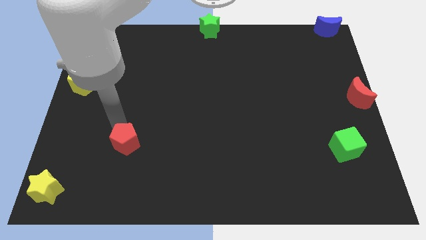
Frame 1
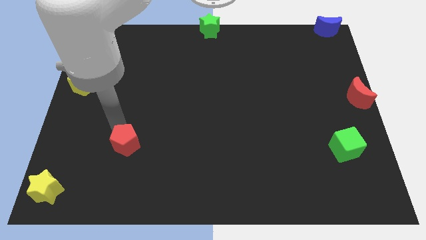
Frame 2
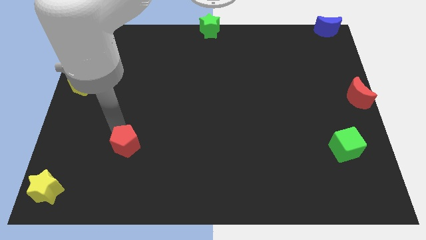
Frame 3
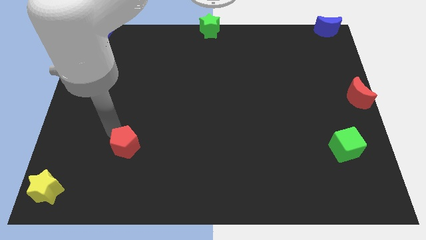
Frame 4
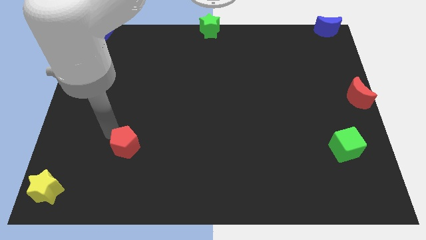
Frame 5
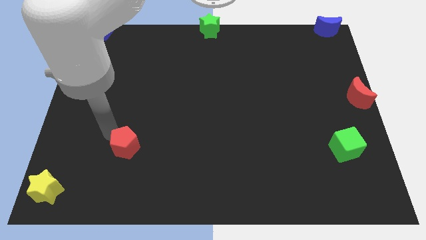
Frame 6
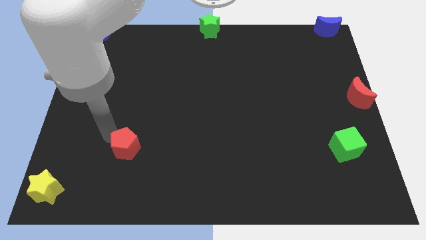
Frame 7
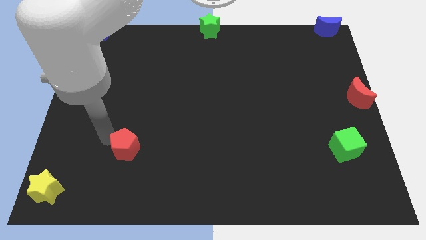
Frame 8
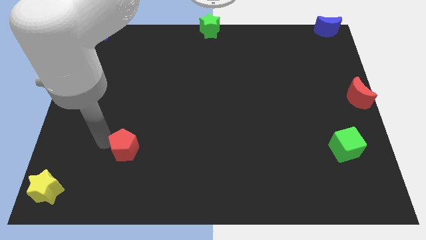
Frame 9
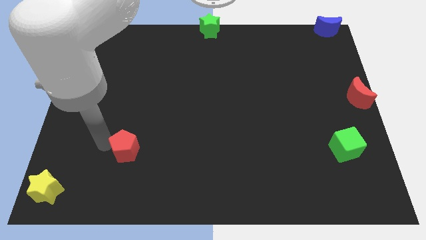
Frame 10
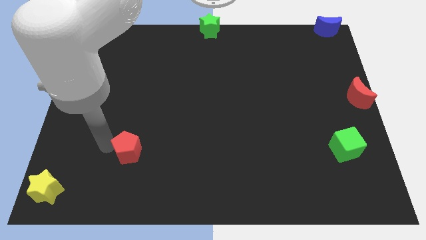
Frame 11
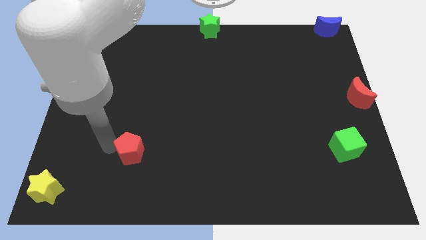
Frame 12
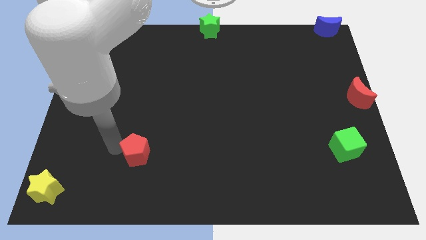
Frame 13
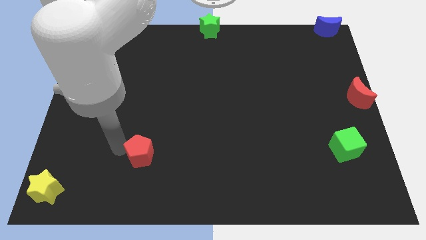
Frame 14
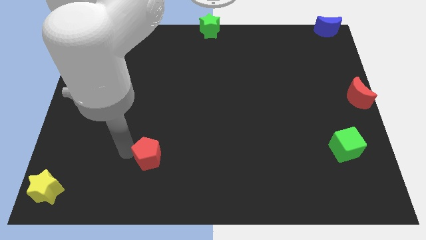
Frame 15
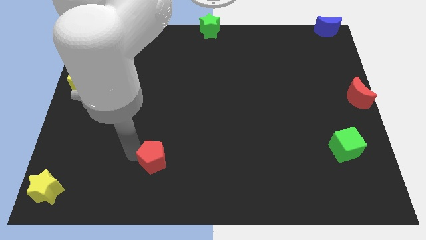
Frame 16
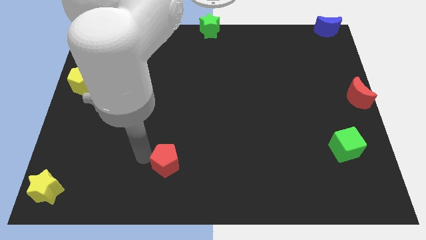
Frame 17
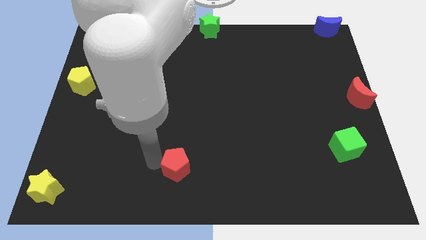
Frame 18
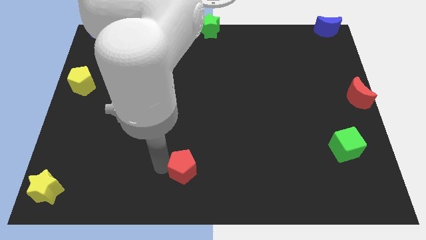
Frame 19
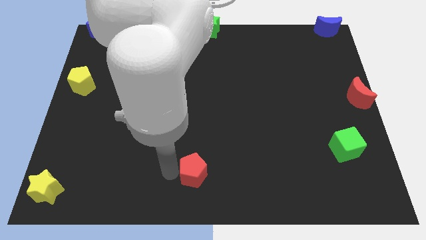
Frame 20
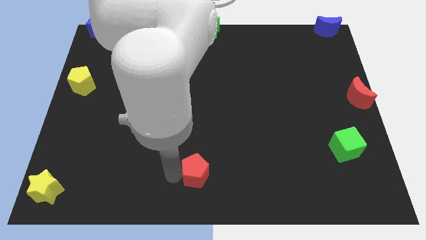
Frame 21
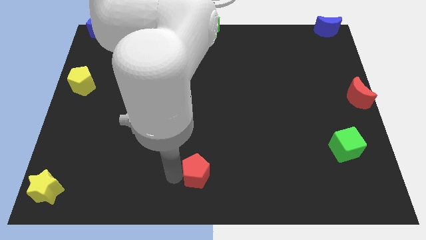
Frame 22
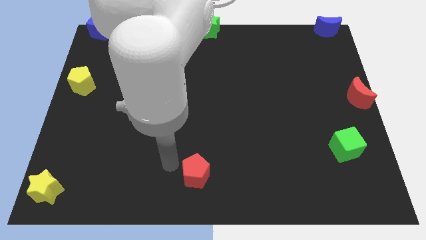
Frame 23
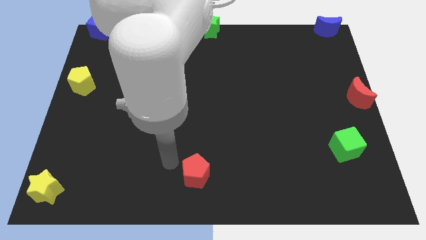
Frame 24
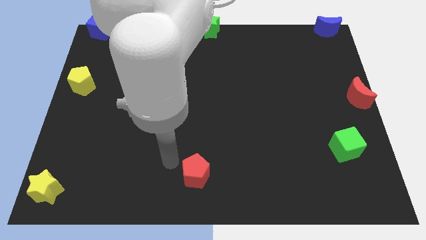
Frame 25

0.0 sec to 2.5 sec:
push red pentagon below green star

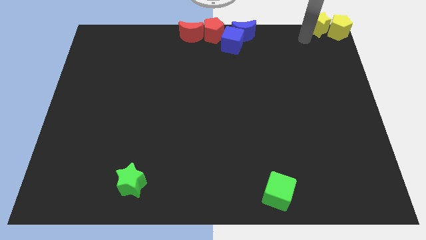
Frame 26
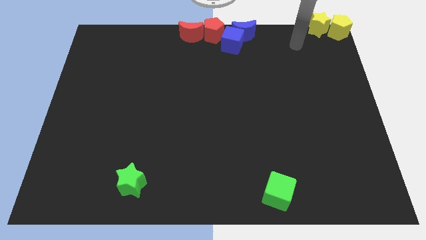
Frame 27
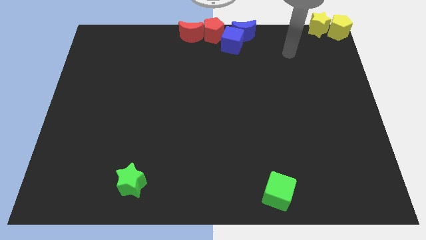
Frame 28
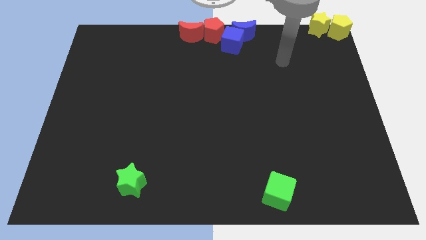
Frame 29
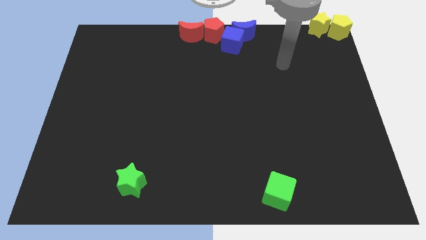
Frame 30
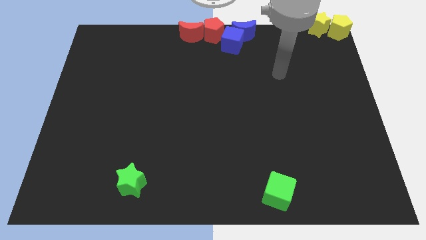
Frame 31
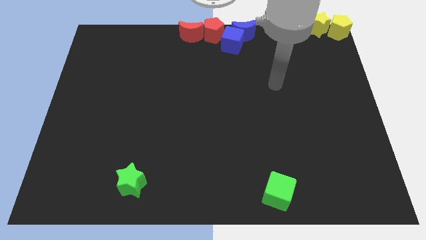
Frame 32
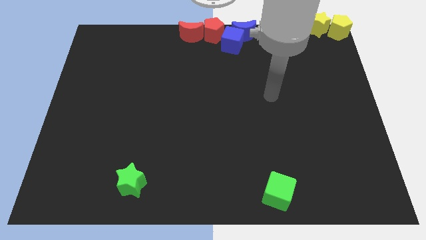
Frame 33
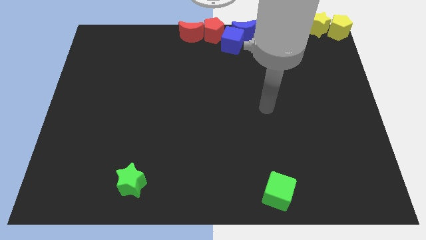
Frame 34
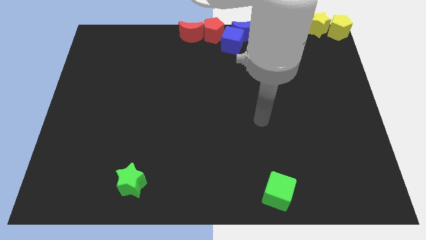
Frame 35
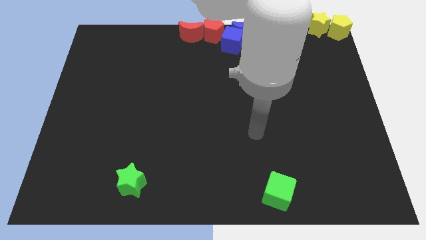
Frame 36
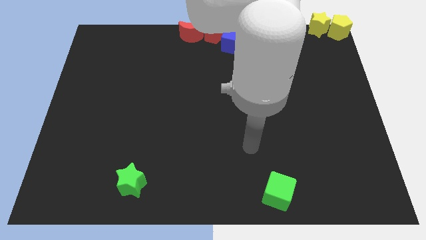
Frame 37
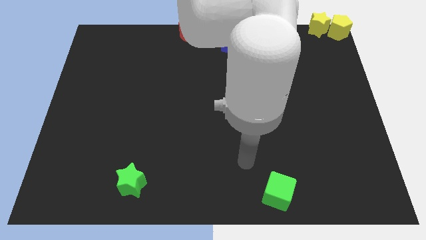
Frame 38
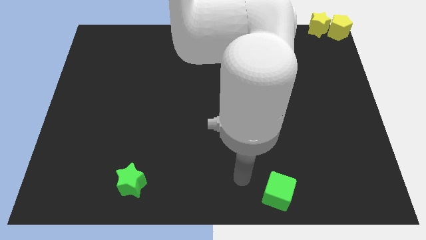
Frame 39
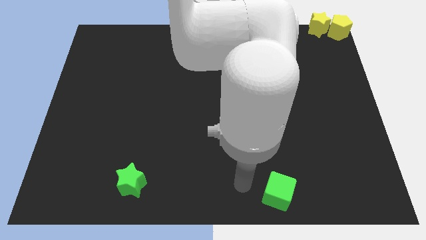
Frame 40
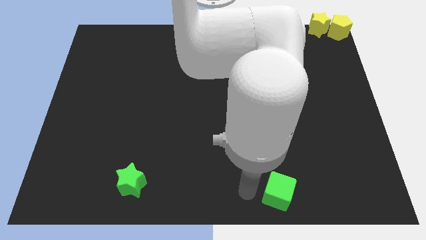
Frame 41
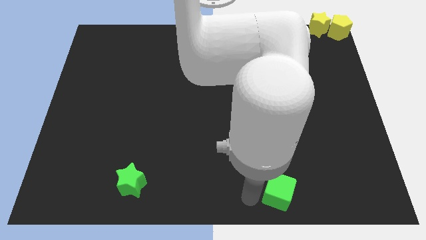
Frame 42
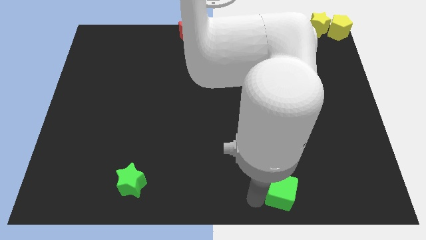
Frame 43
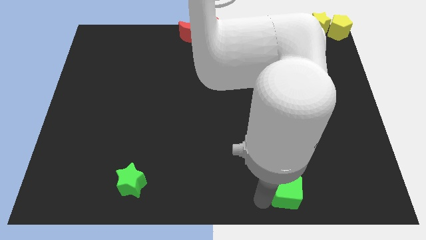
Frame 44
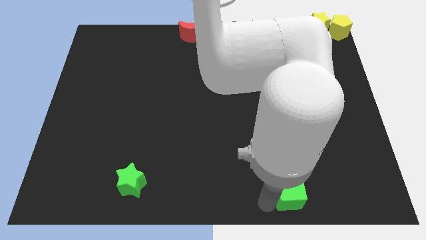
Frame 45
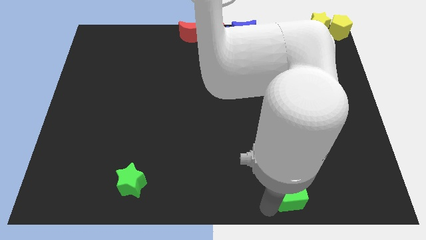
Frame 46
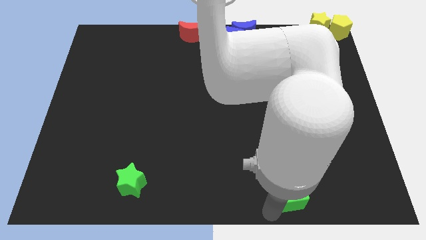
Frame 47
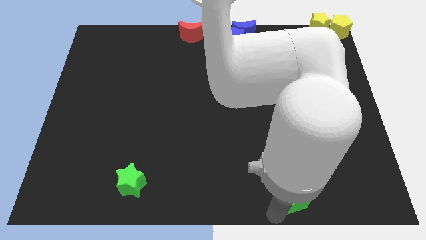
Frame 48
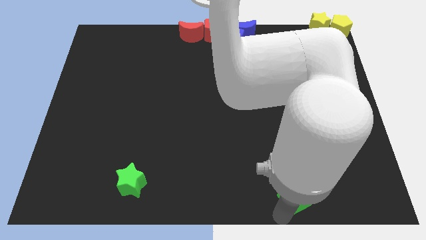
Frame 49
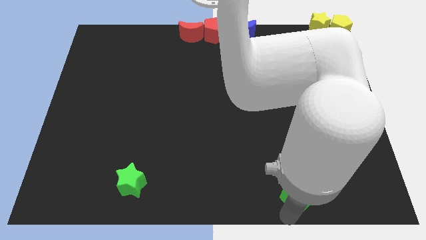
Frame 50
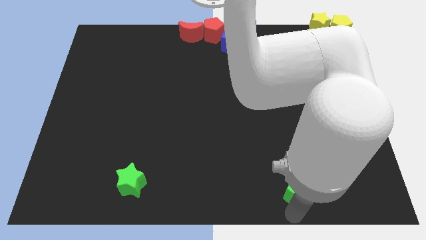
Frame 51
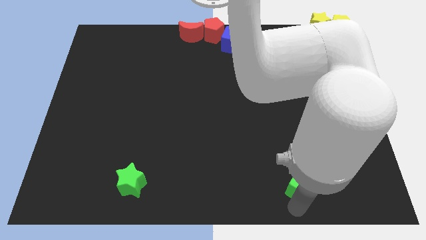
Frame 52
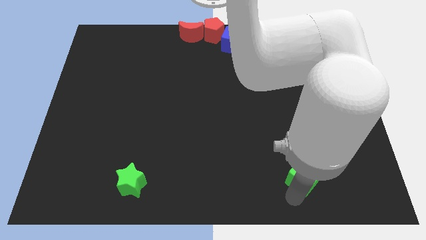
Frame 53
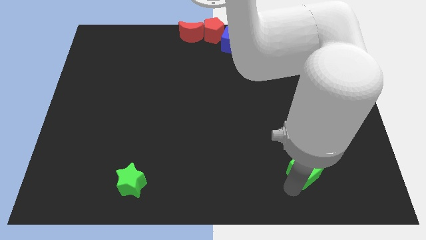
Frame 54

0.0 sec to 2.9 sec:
push green cube slightly upwards

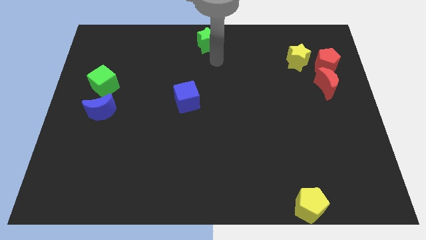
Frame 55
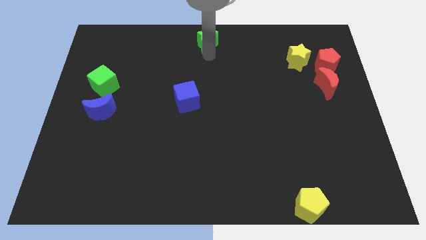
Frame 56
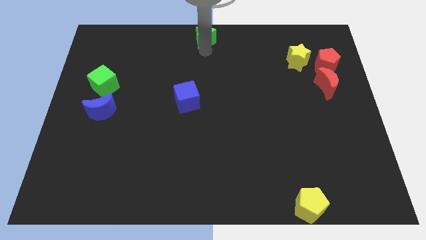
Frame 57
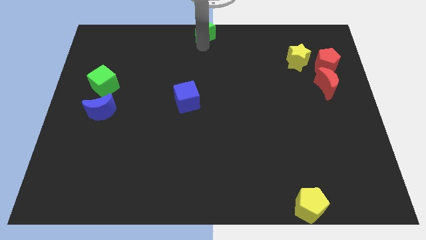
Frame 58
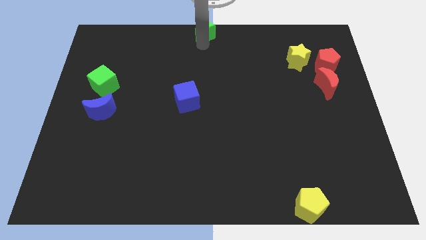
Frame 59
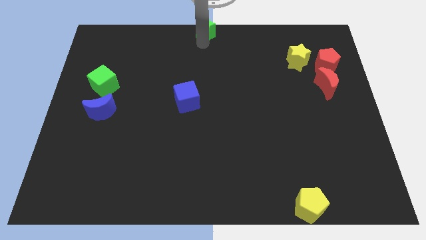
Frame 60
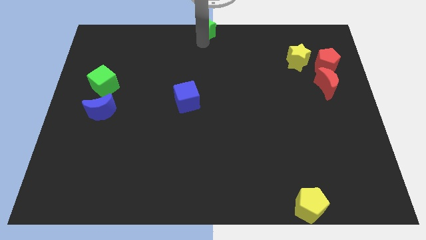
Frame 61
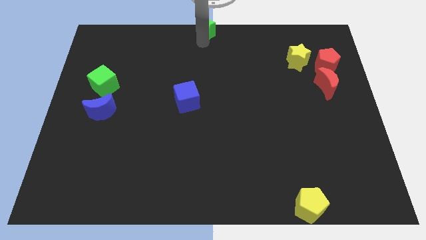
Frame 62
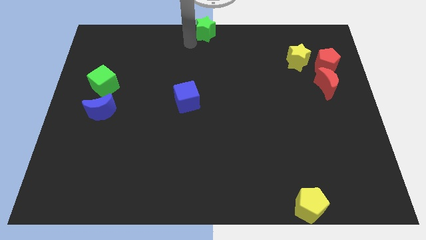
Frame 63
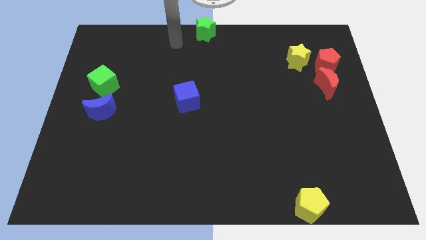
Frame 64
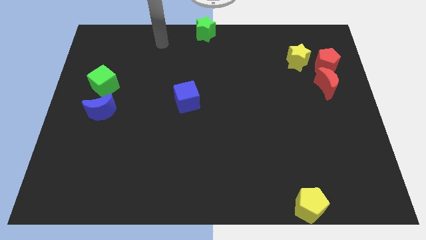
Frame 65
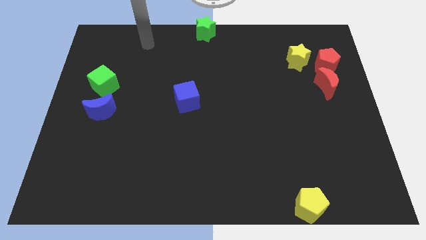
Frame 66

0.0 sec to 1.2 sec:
tap on the bottom of the green star

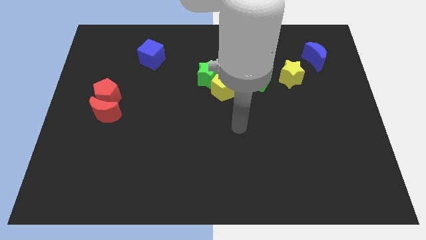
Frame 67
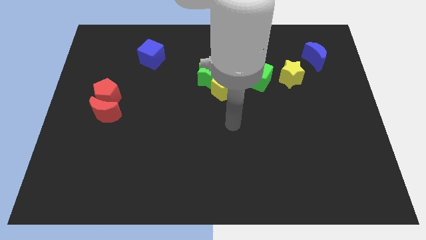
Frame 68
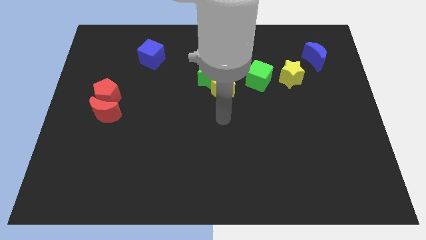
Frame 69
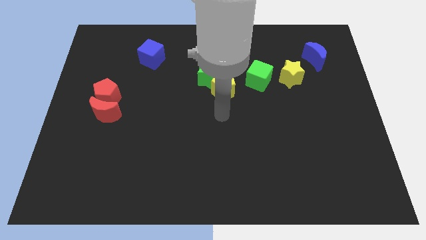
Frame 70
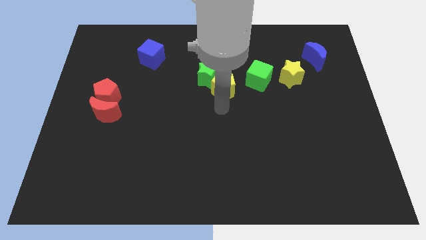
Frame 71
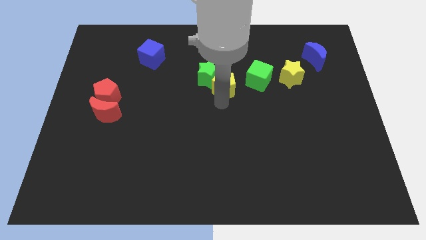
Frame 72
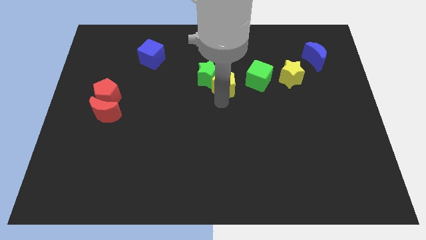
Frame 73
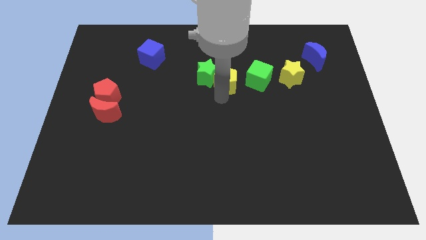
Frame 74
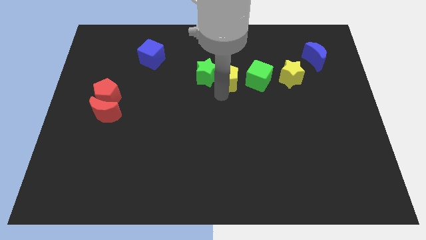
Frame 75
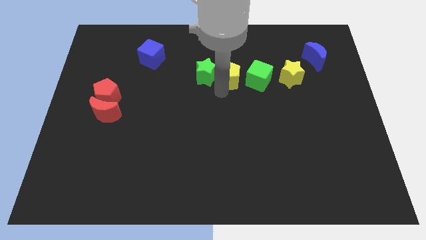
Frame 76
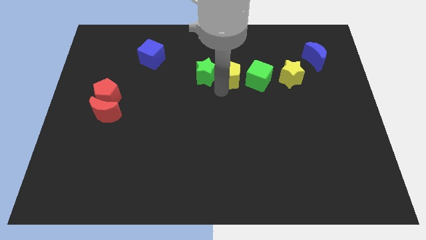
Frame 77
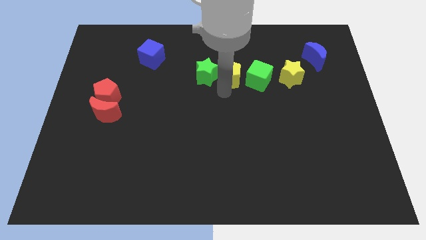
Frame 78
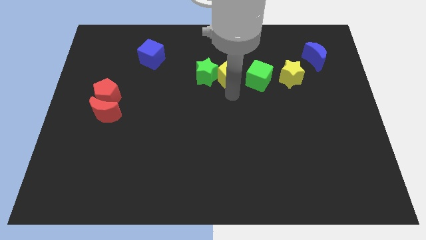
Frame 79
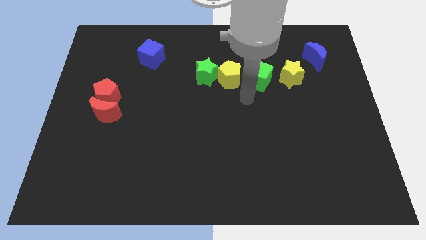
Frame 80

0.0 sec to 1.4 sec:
move the yellow pentagon in between the two green blocks

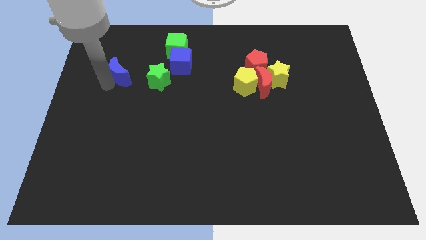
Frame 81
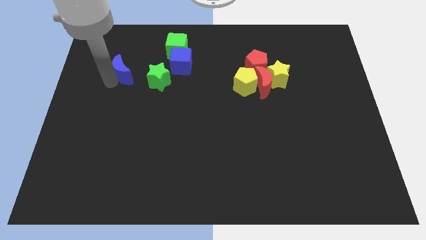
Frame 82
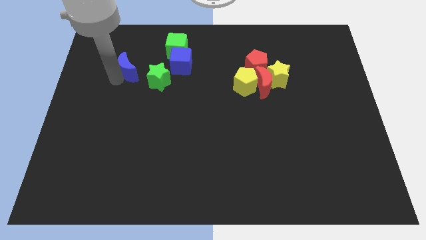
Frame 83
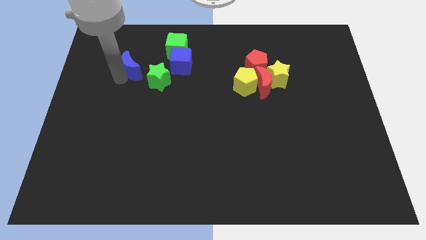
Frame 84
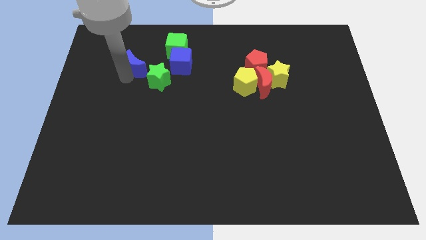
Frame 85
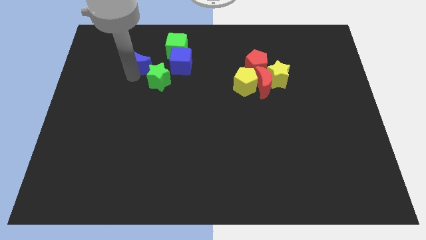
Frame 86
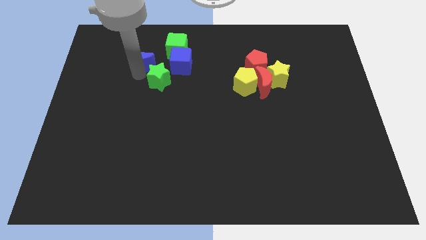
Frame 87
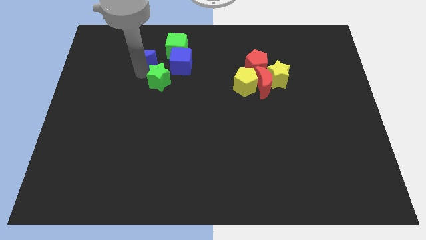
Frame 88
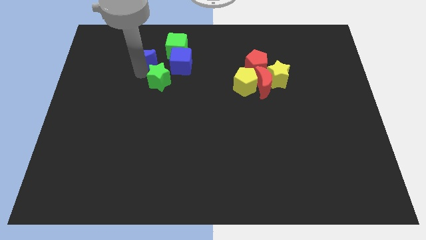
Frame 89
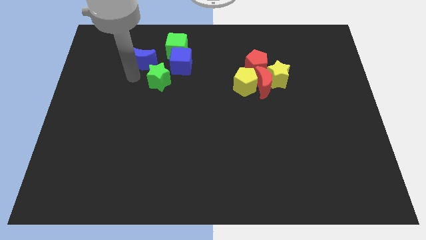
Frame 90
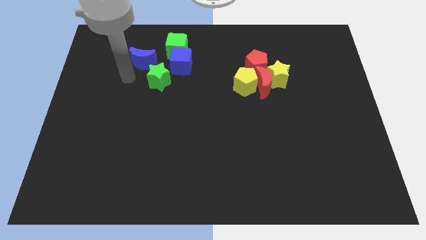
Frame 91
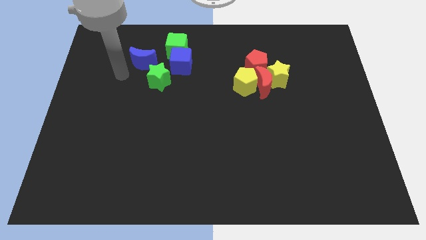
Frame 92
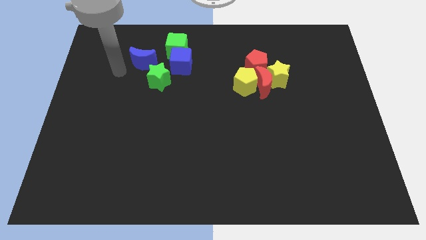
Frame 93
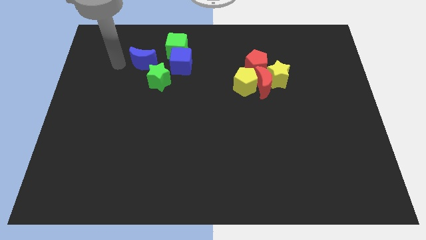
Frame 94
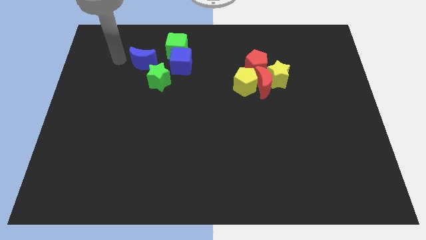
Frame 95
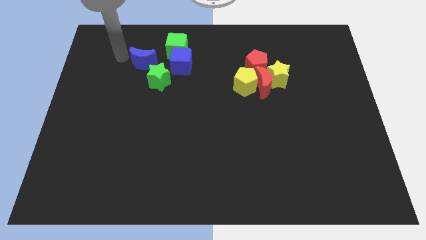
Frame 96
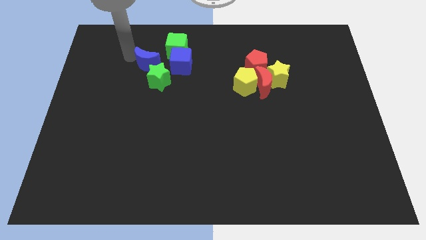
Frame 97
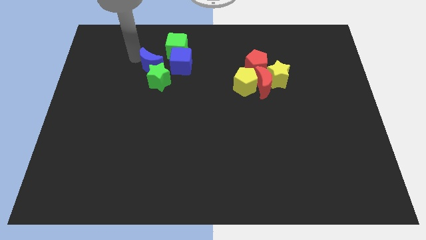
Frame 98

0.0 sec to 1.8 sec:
put the blue crescent on the left side of the blue cube
